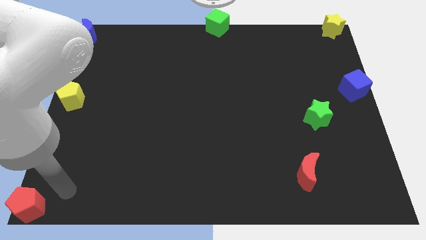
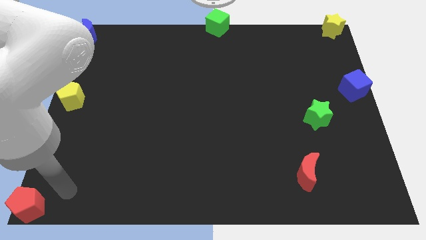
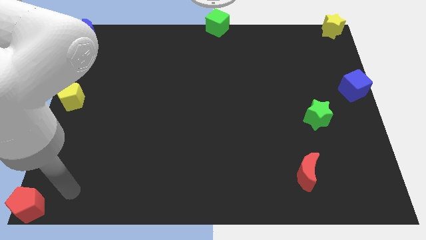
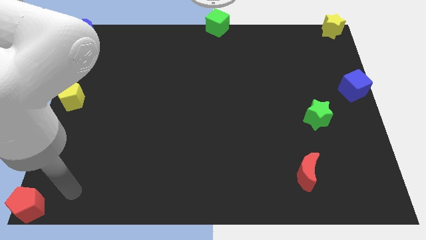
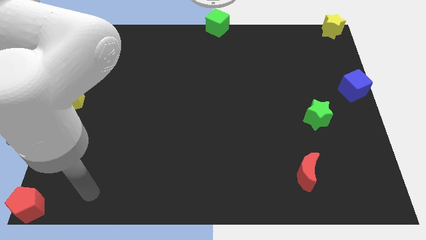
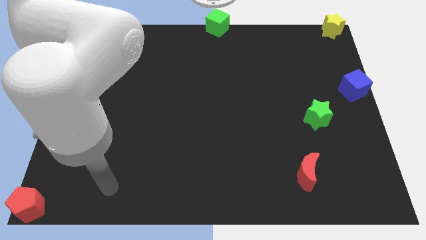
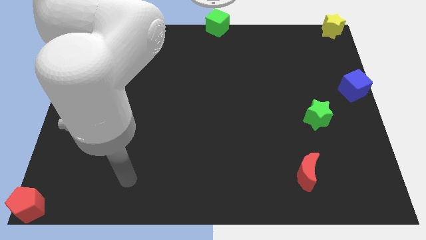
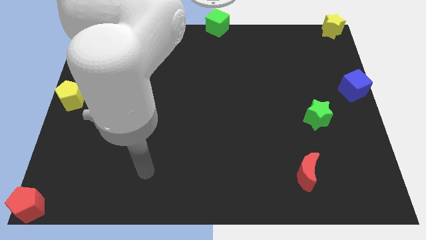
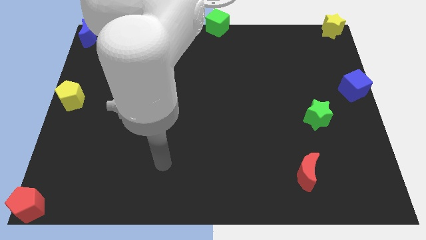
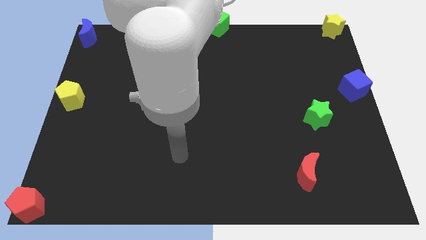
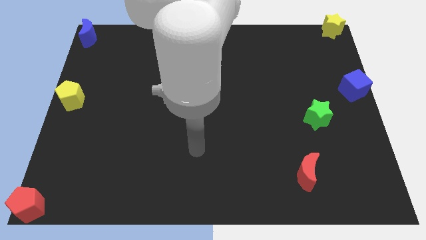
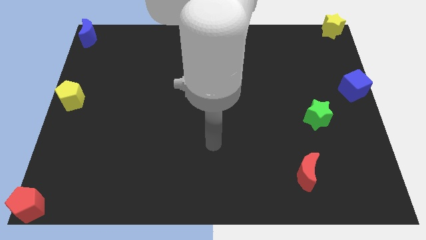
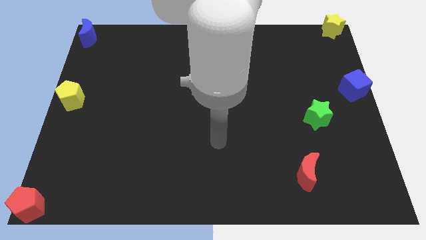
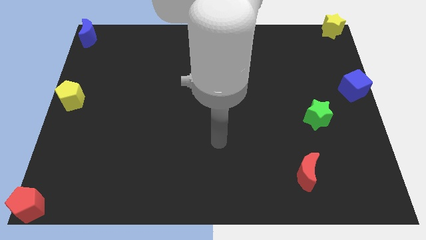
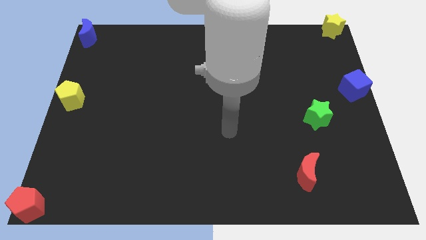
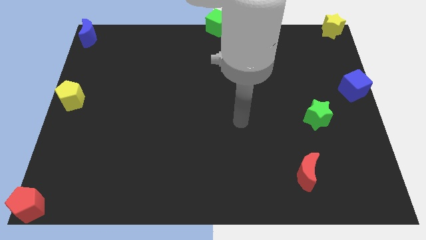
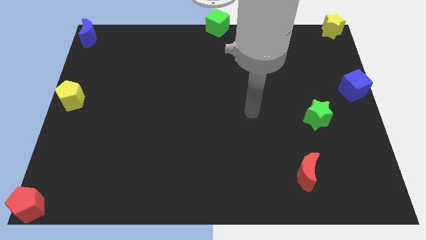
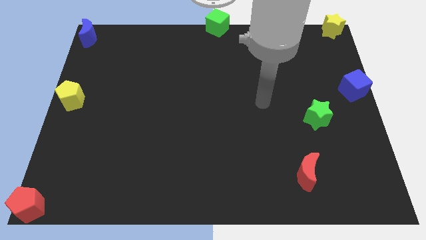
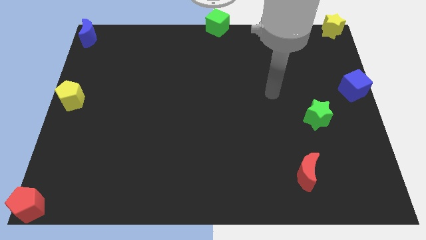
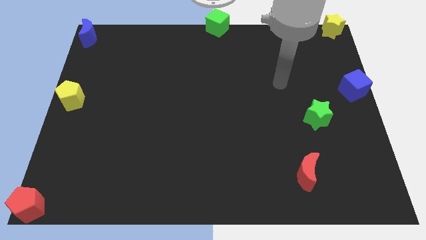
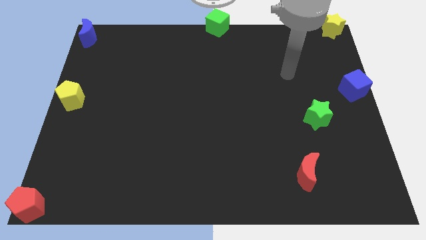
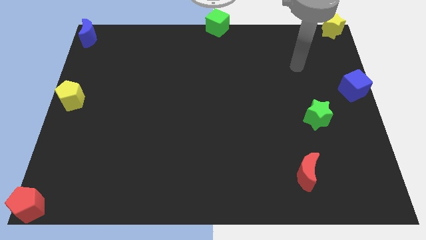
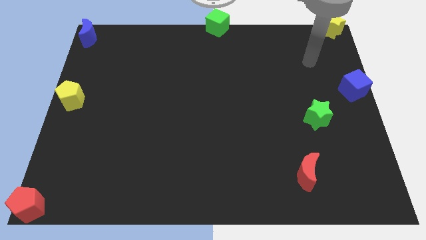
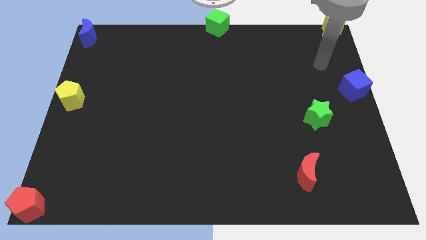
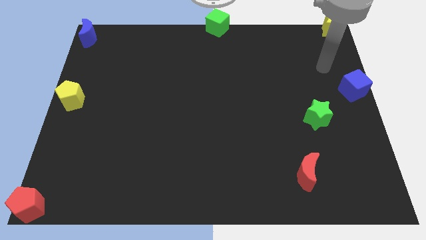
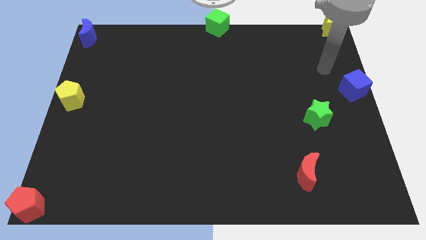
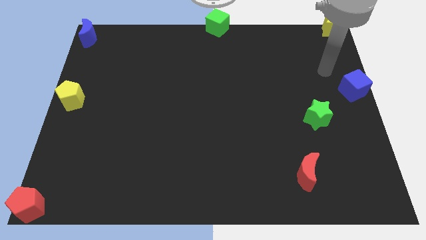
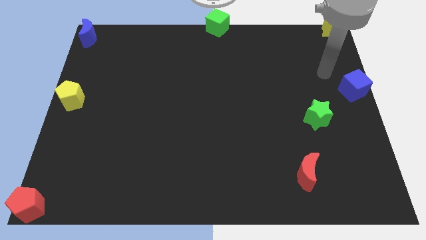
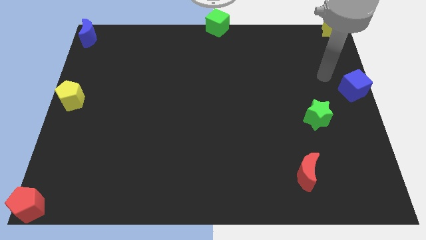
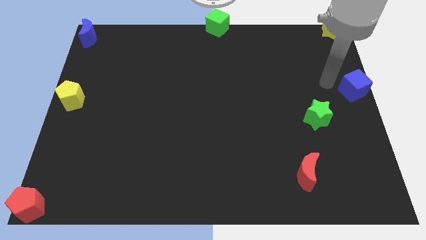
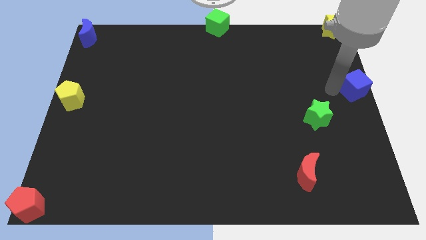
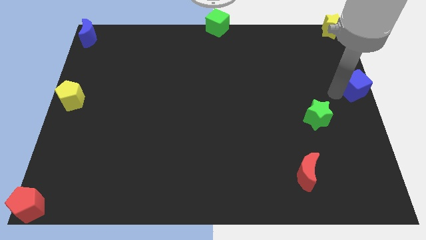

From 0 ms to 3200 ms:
move your arm towards the blue cube

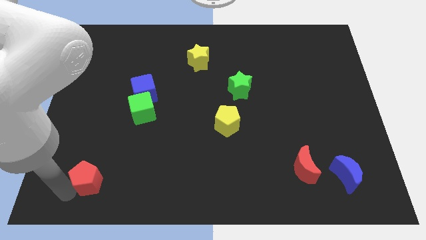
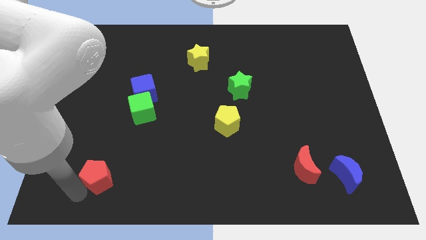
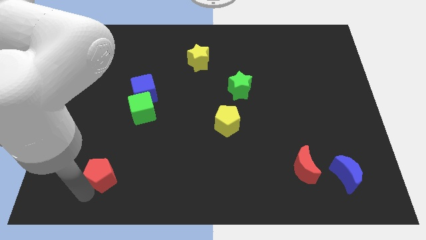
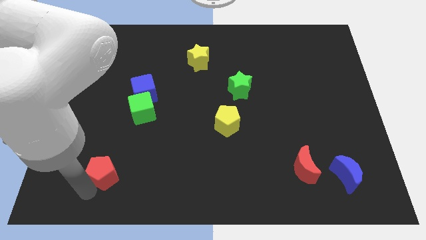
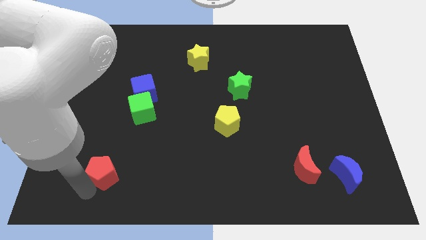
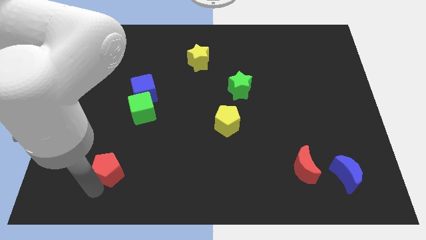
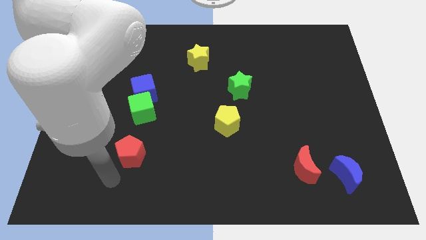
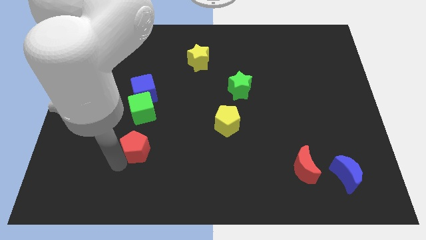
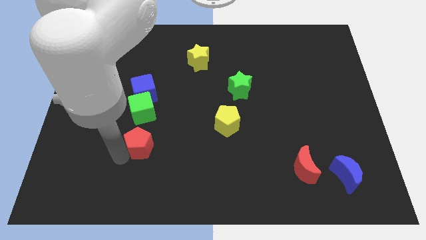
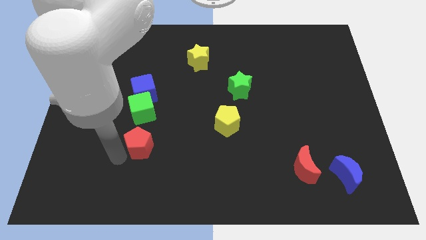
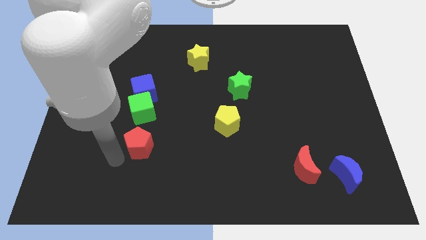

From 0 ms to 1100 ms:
move red pentagon towards green cube

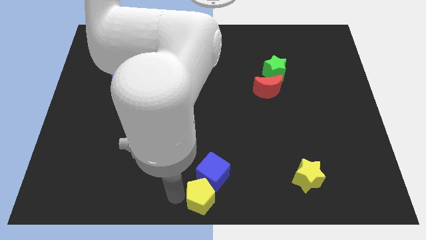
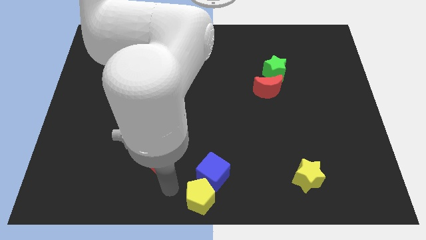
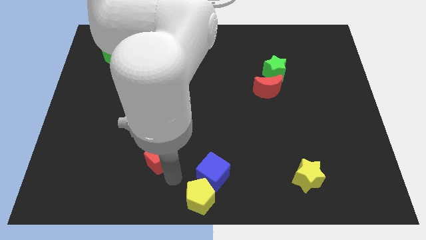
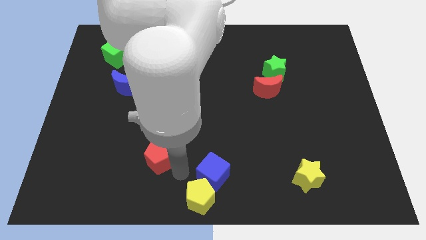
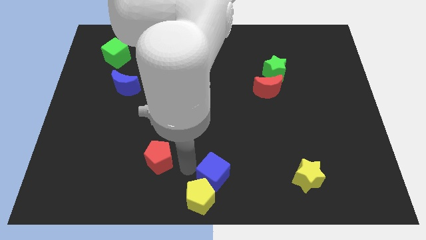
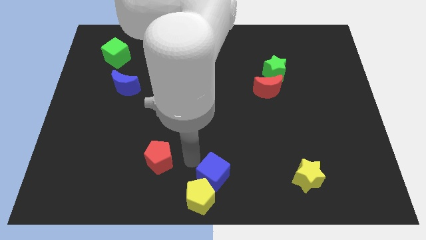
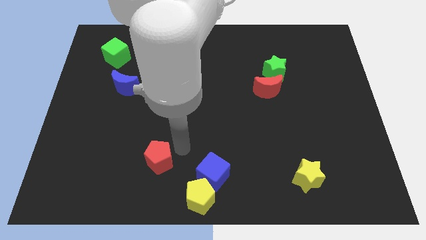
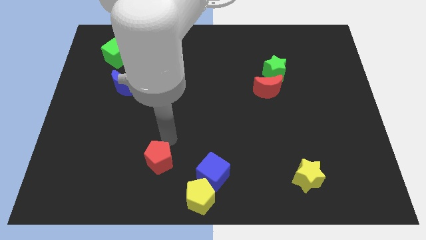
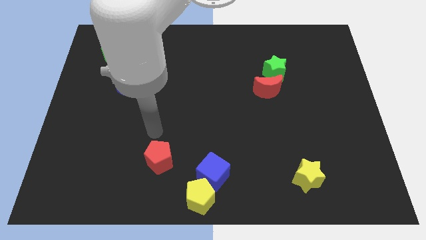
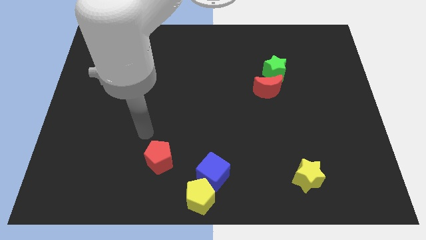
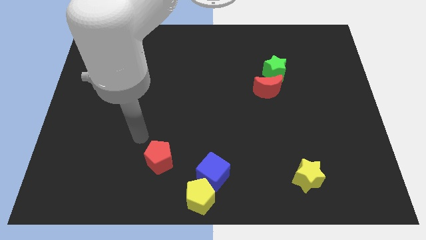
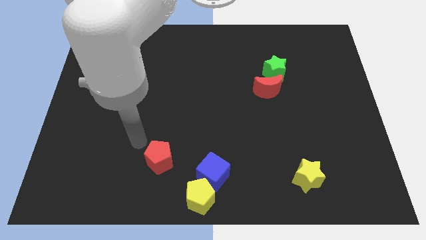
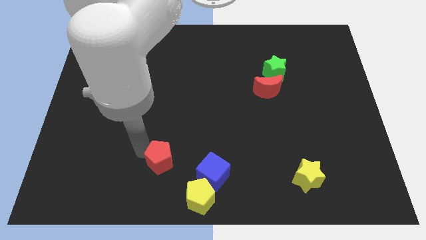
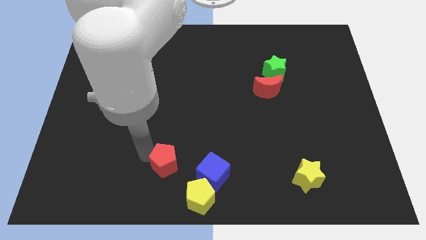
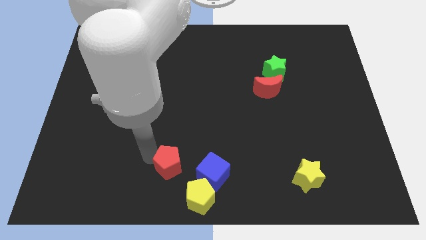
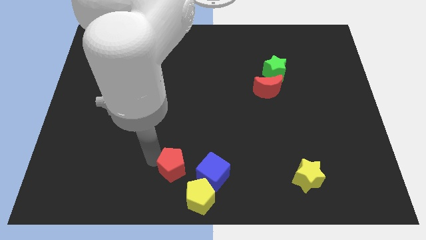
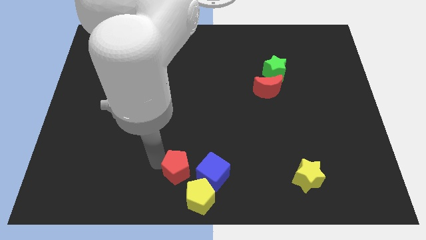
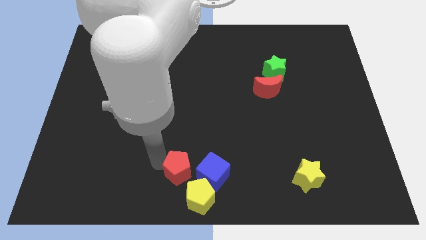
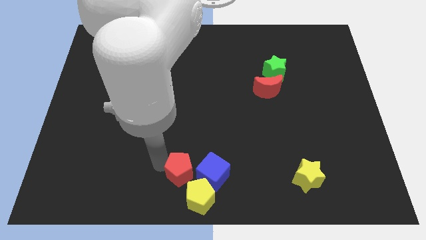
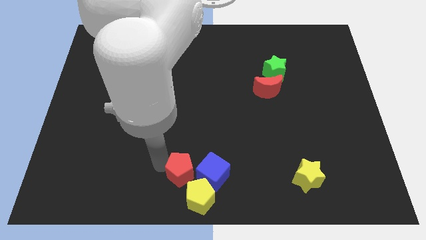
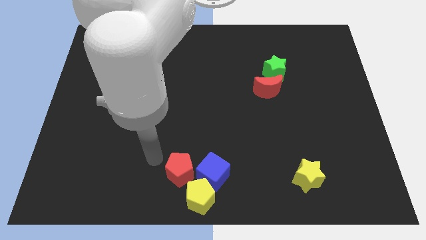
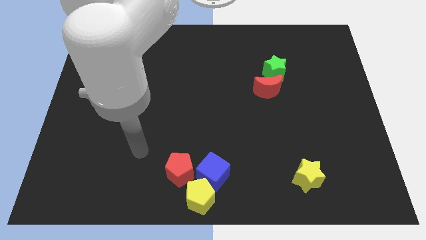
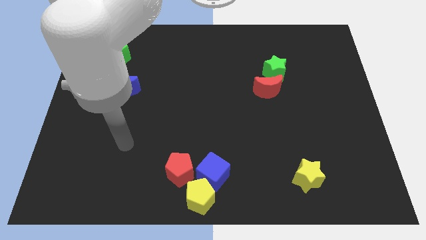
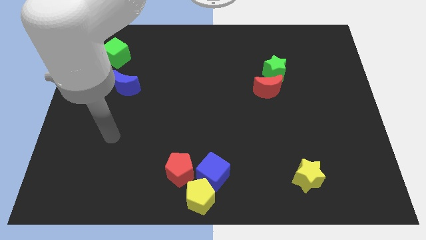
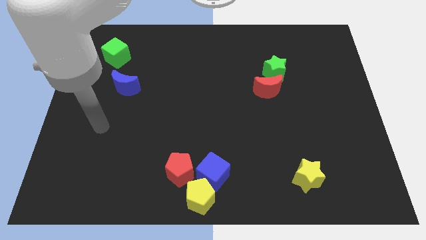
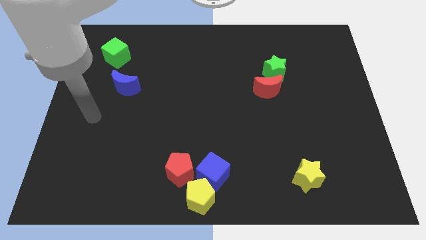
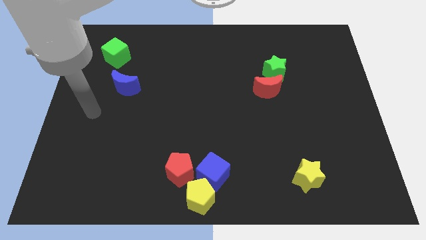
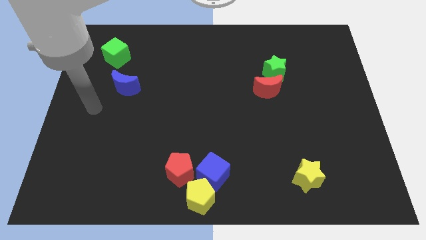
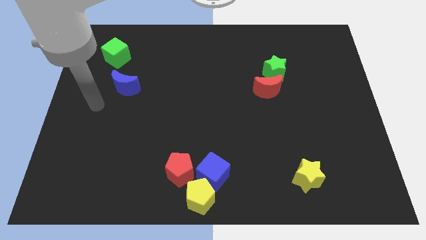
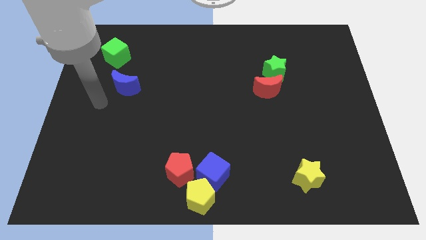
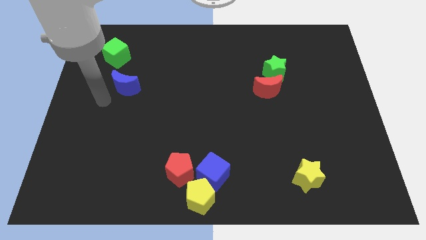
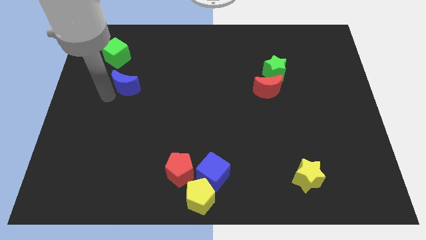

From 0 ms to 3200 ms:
slide the red pentagon slightly towards the yellow pentagon

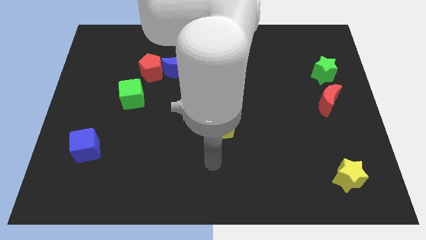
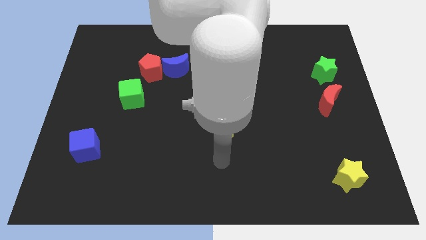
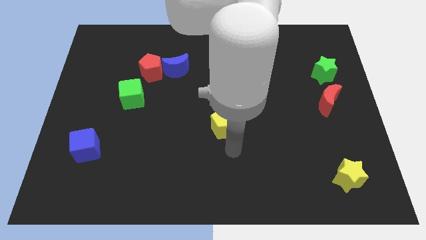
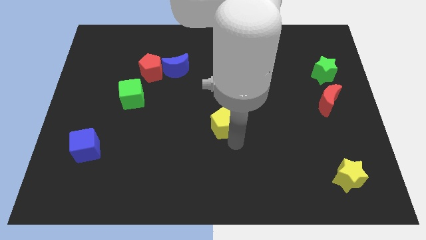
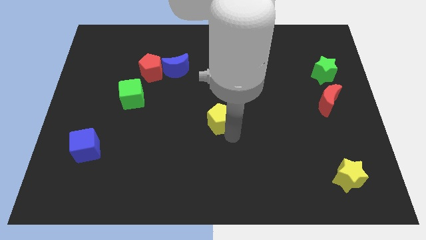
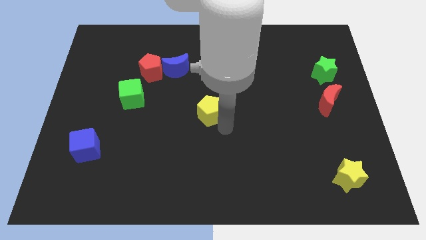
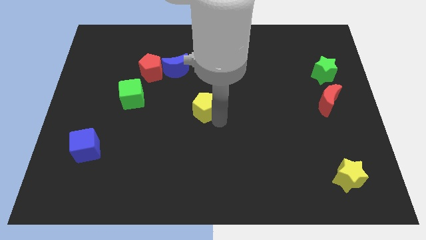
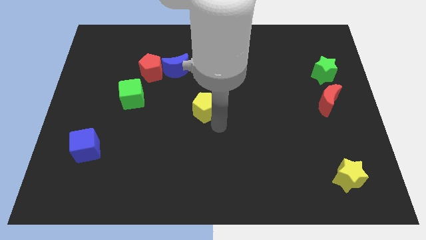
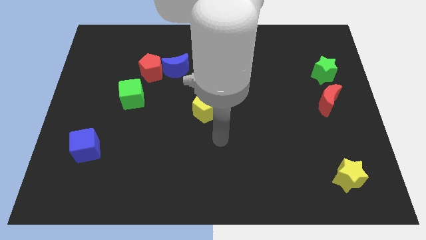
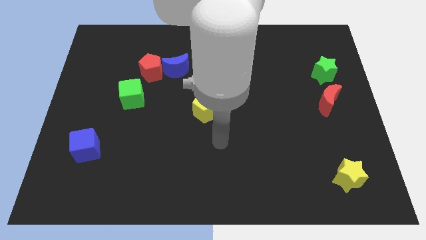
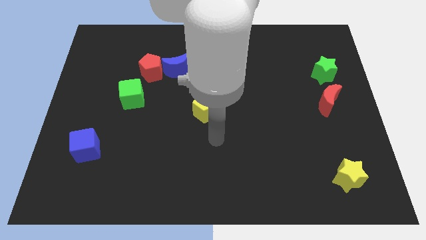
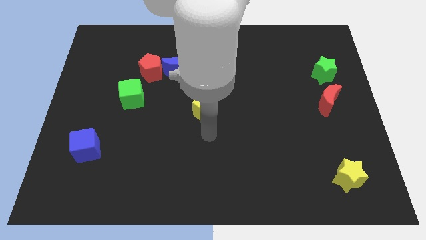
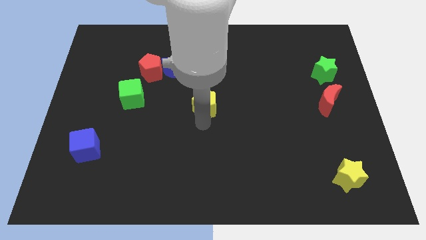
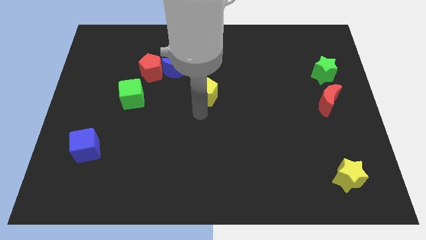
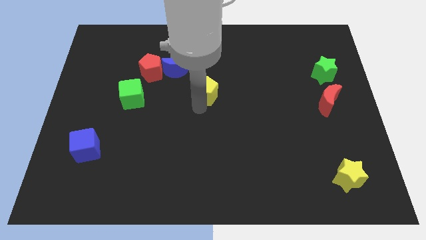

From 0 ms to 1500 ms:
slide the yellow pentagon to the right side of the green cube

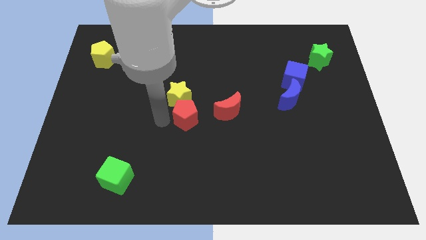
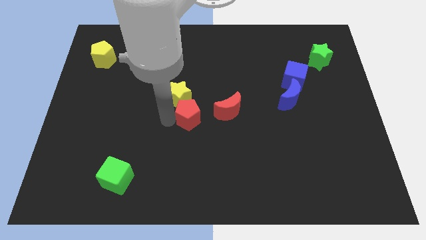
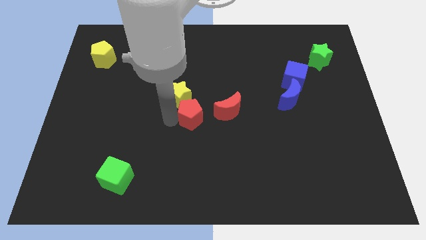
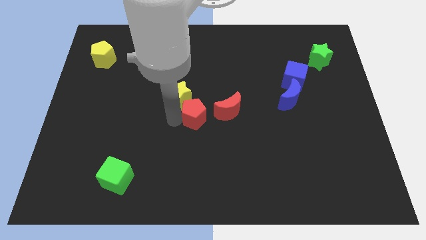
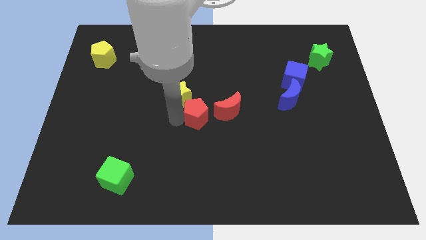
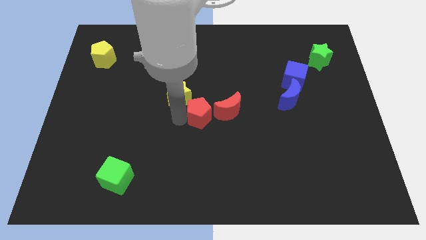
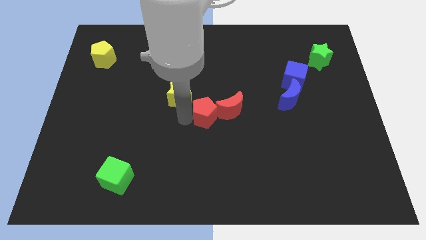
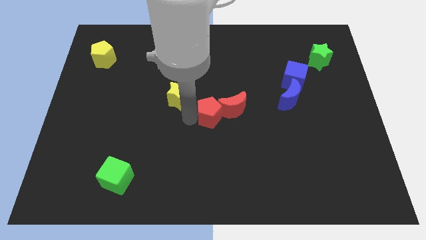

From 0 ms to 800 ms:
push the red pentagon into the red moon
